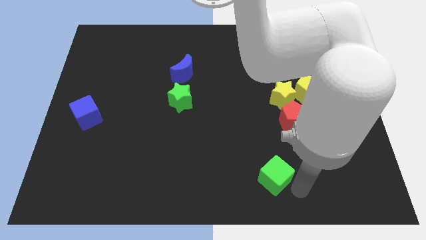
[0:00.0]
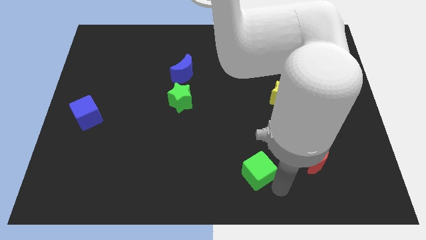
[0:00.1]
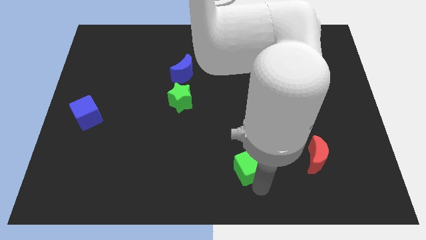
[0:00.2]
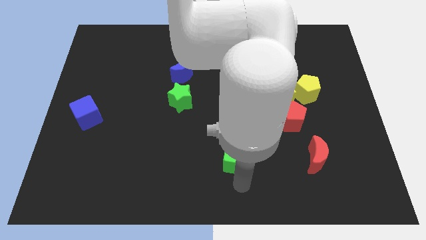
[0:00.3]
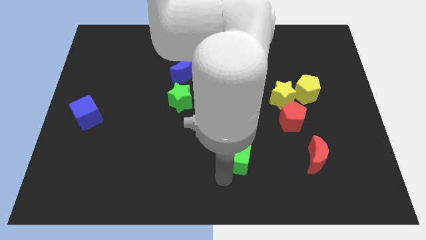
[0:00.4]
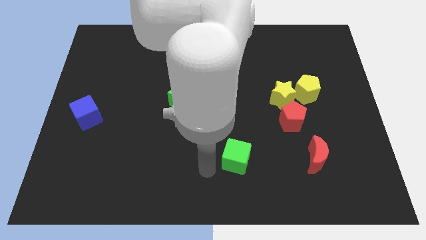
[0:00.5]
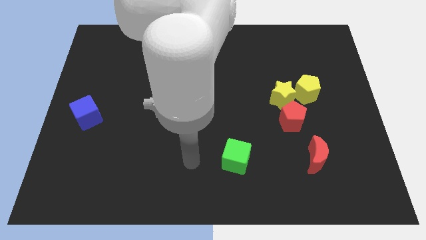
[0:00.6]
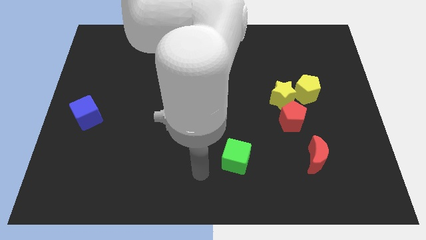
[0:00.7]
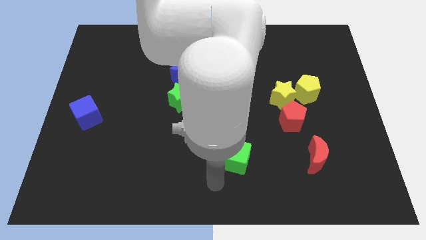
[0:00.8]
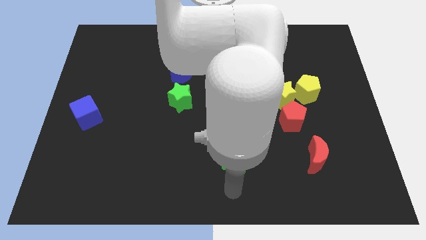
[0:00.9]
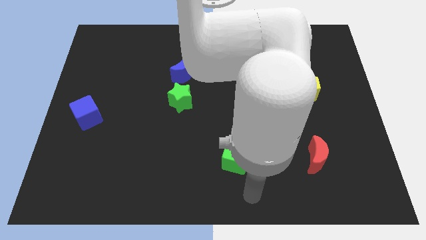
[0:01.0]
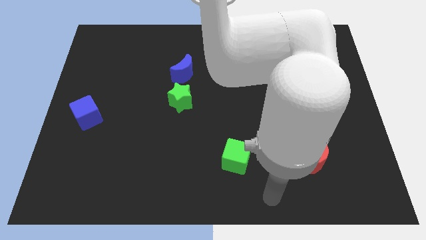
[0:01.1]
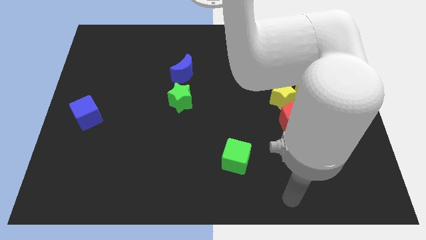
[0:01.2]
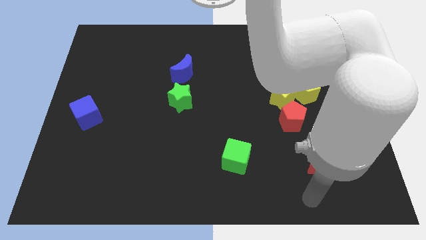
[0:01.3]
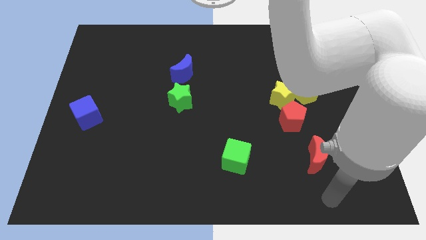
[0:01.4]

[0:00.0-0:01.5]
place green cube parallel to the red moon

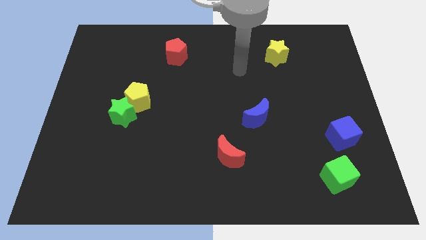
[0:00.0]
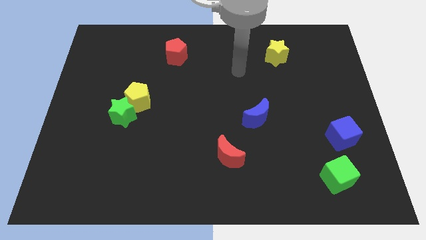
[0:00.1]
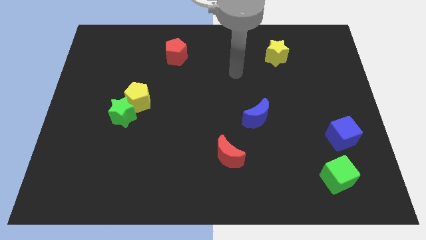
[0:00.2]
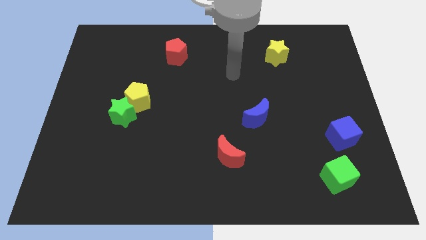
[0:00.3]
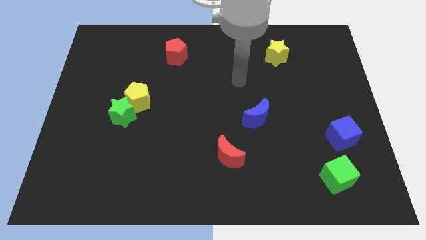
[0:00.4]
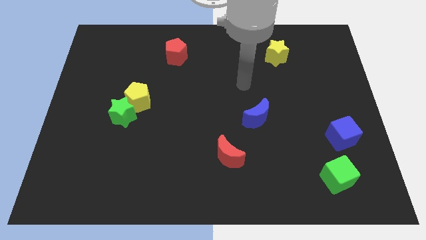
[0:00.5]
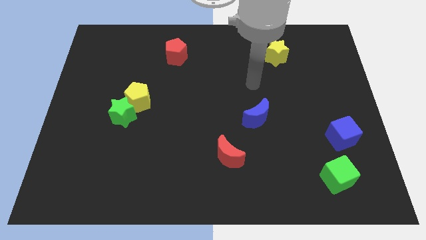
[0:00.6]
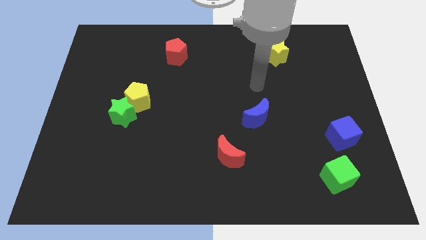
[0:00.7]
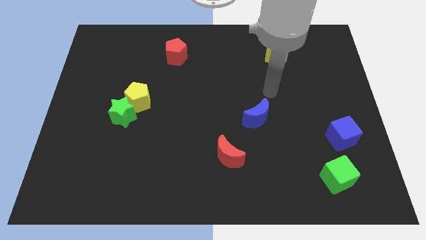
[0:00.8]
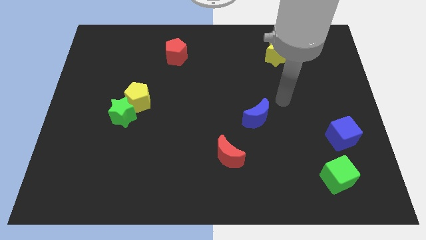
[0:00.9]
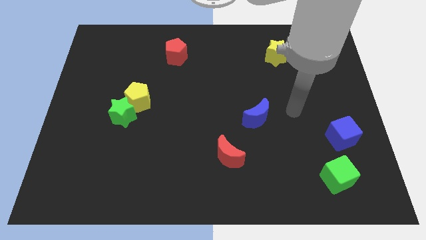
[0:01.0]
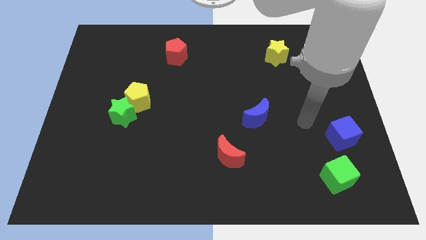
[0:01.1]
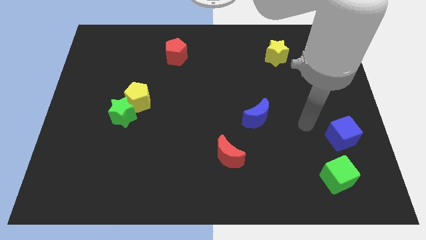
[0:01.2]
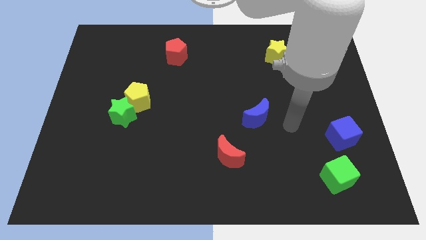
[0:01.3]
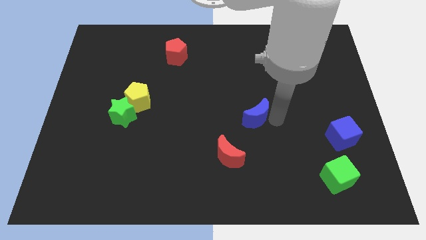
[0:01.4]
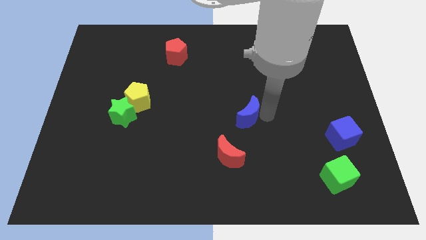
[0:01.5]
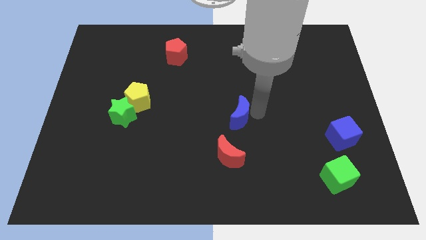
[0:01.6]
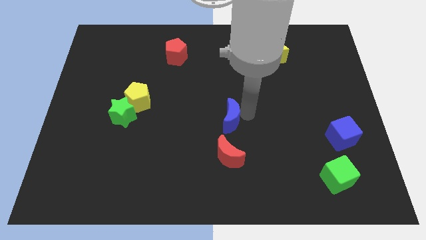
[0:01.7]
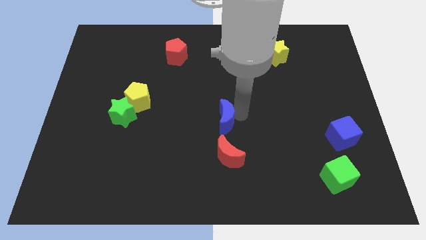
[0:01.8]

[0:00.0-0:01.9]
place the blue crescent above the red crescent

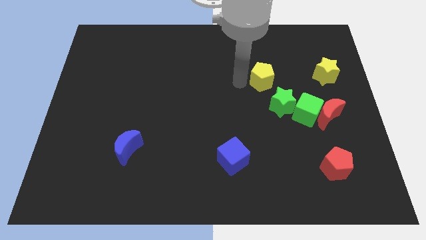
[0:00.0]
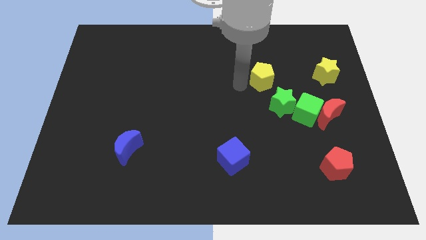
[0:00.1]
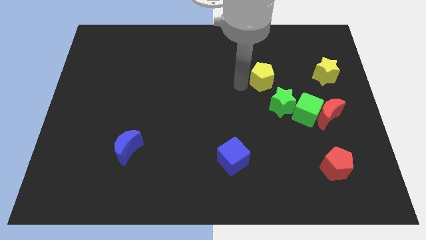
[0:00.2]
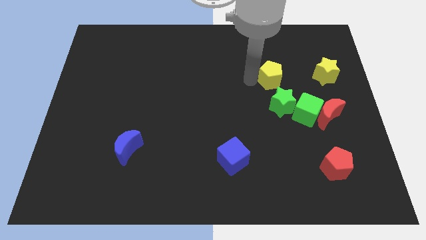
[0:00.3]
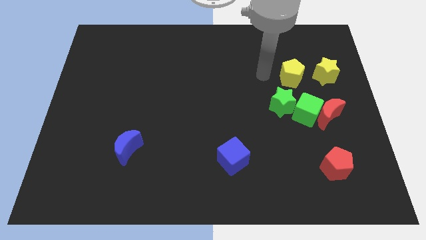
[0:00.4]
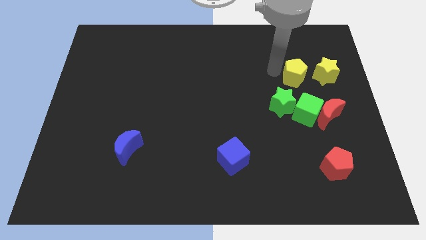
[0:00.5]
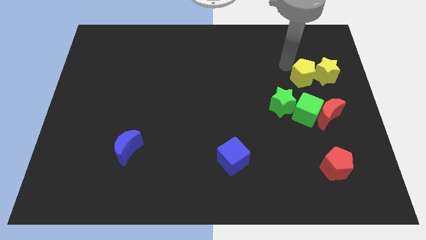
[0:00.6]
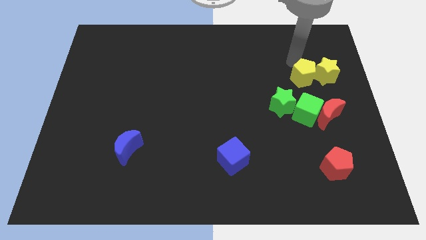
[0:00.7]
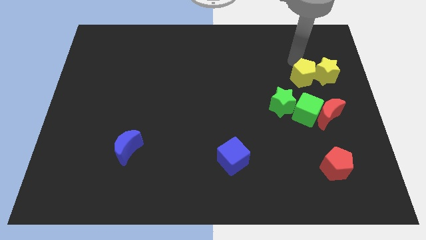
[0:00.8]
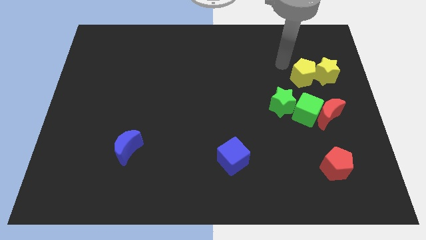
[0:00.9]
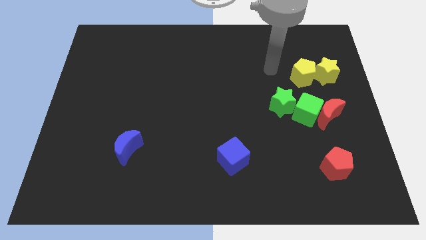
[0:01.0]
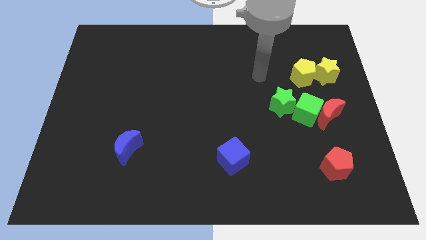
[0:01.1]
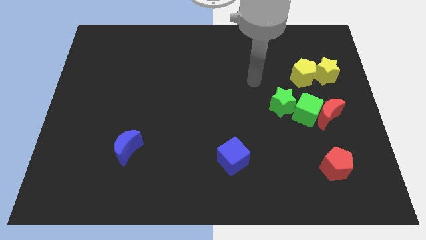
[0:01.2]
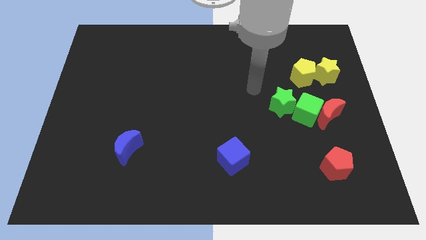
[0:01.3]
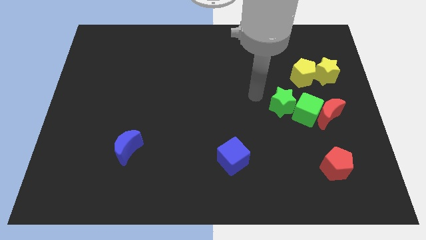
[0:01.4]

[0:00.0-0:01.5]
drag the yellow pentagon close to yellow star

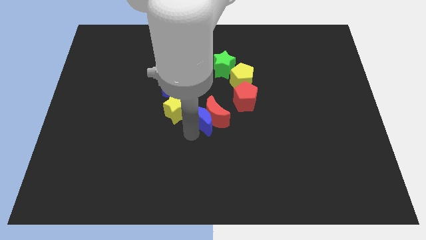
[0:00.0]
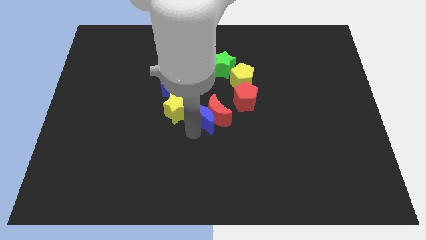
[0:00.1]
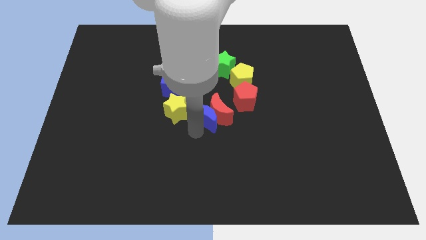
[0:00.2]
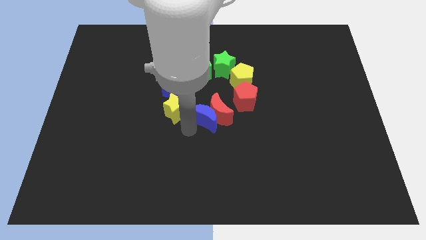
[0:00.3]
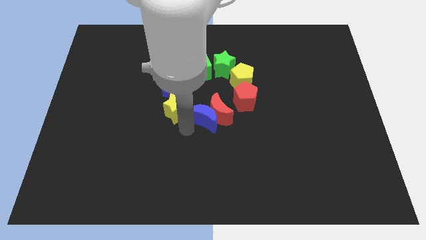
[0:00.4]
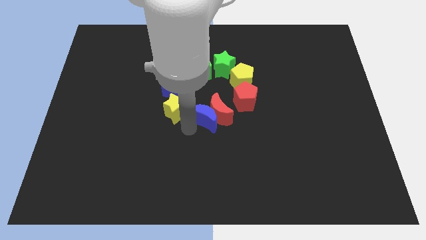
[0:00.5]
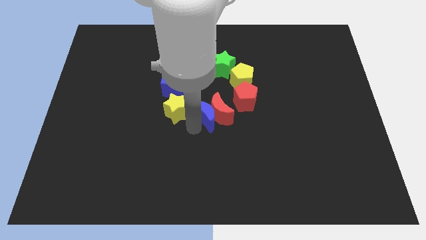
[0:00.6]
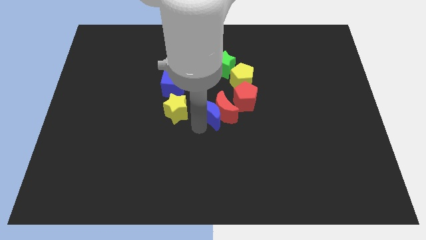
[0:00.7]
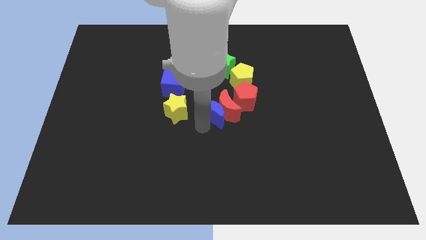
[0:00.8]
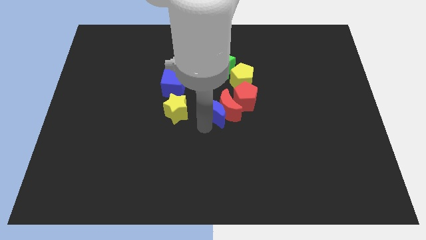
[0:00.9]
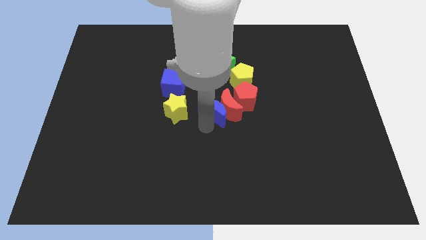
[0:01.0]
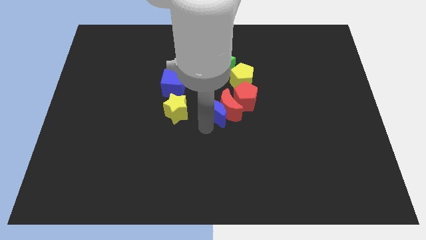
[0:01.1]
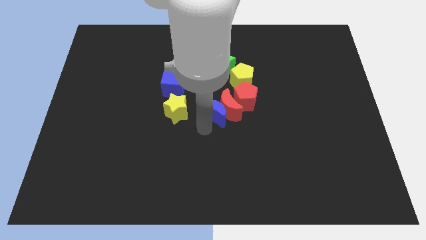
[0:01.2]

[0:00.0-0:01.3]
move red and blue moon into red pentagon

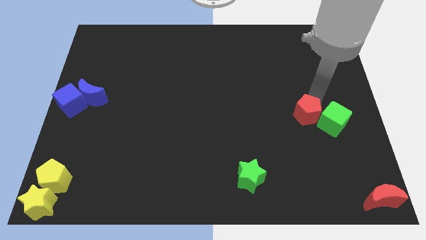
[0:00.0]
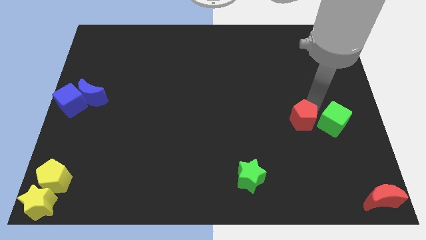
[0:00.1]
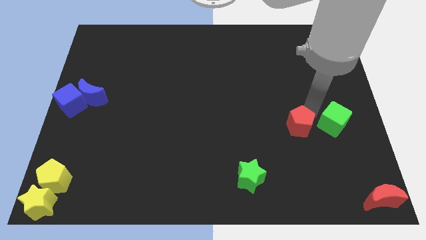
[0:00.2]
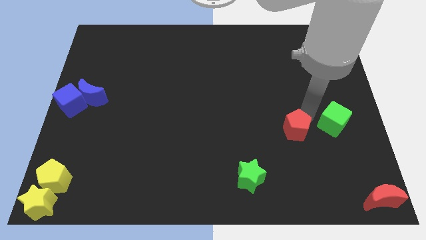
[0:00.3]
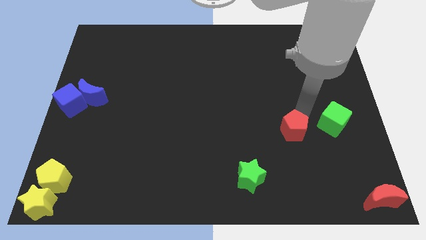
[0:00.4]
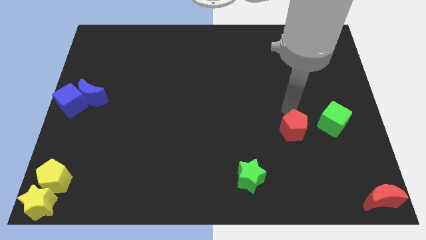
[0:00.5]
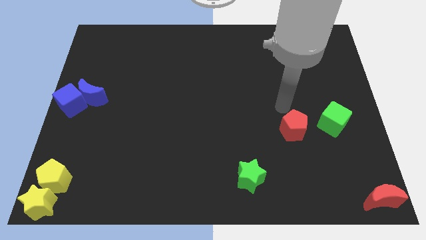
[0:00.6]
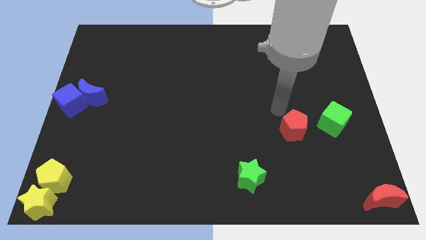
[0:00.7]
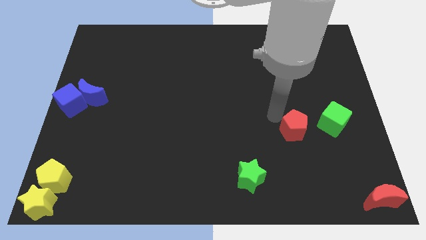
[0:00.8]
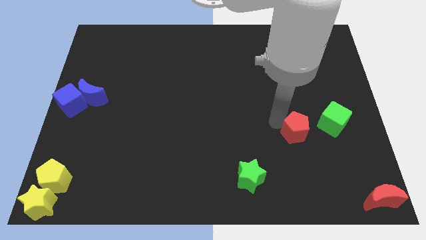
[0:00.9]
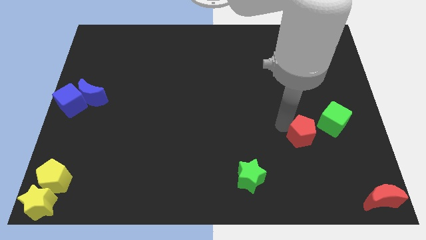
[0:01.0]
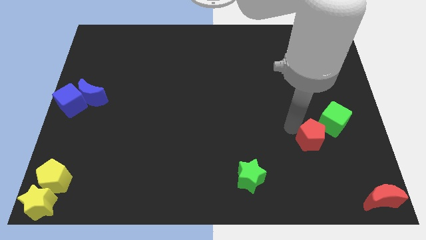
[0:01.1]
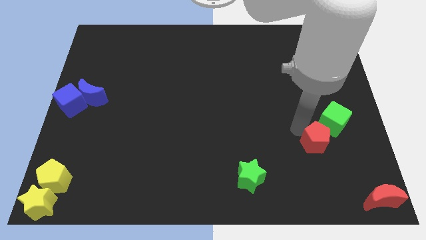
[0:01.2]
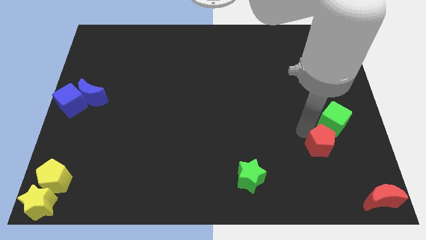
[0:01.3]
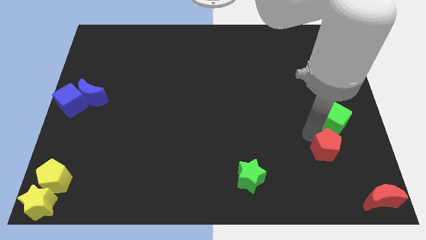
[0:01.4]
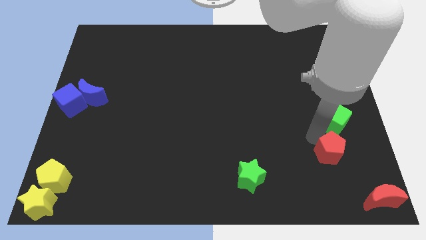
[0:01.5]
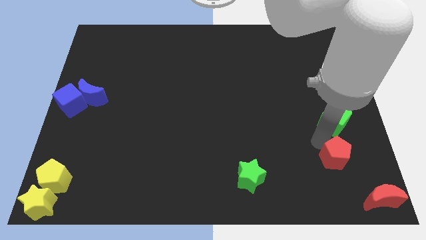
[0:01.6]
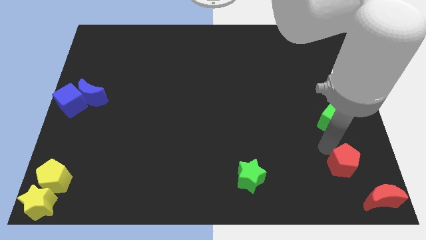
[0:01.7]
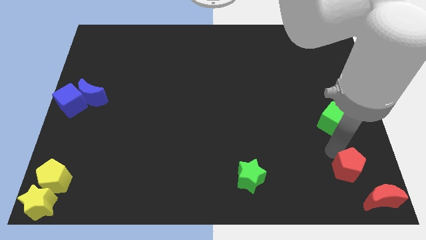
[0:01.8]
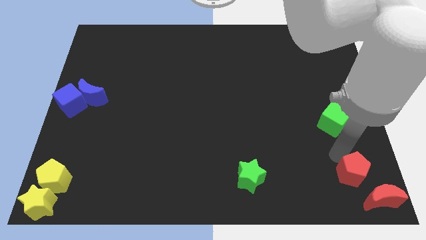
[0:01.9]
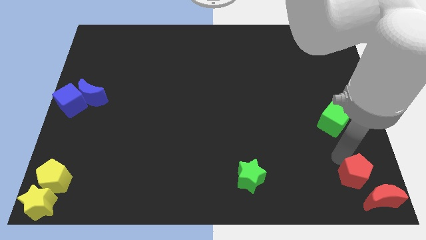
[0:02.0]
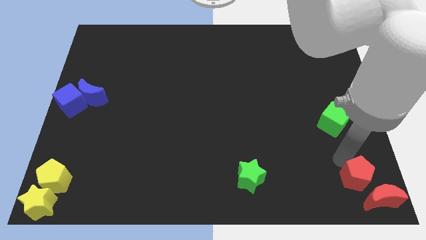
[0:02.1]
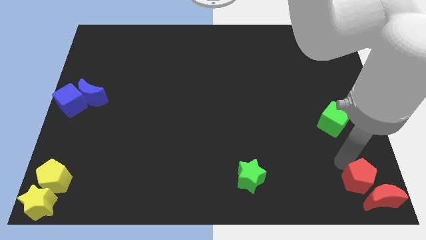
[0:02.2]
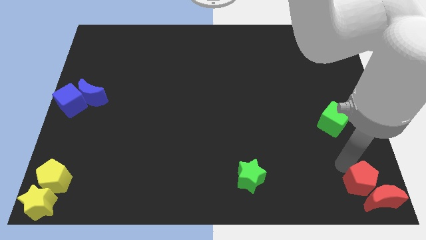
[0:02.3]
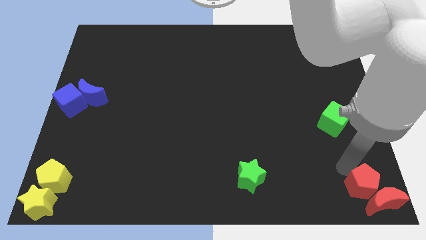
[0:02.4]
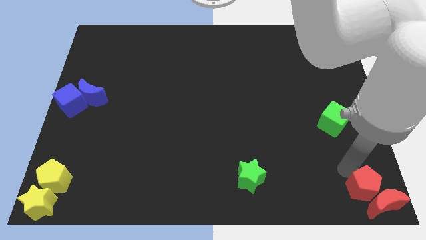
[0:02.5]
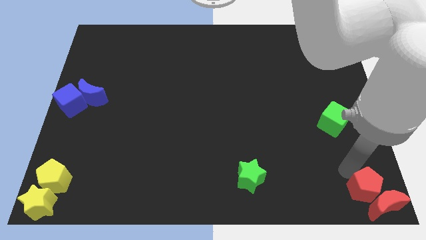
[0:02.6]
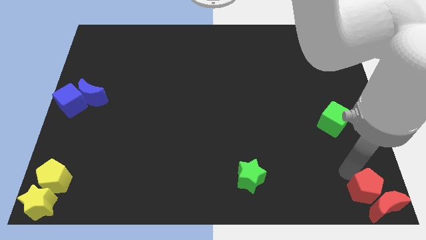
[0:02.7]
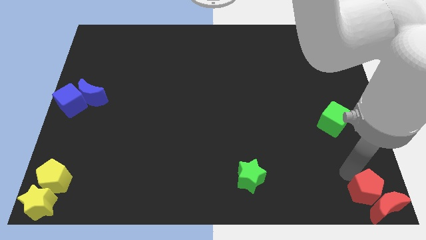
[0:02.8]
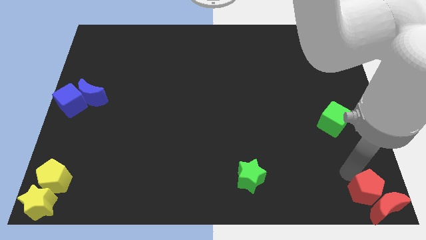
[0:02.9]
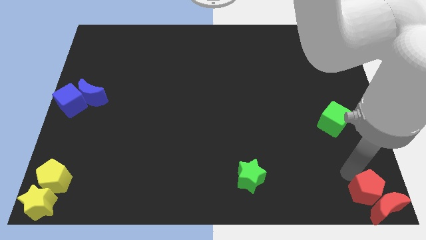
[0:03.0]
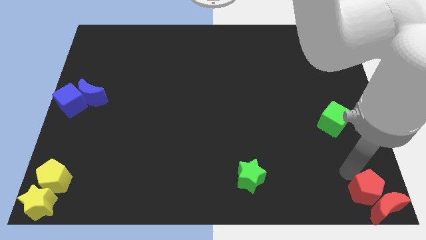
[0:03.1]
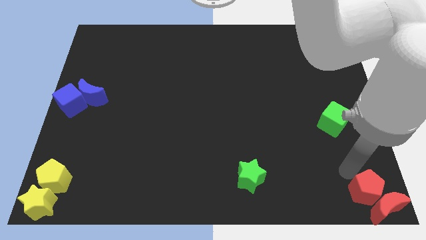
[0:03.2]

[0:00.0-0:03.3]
move the red pentagon into the red moon
